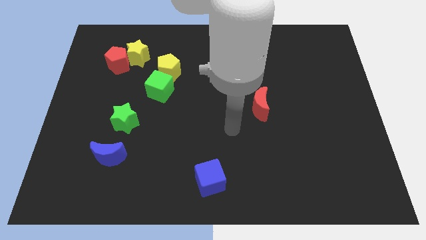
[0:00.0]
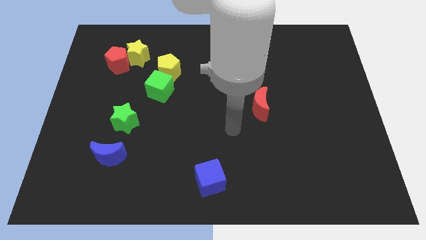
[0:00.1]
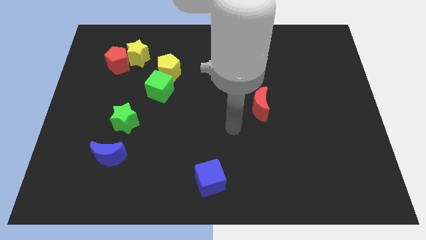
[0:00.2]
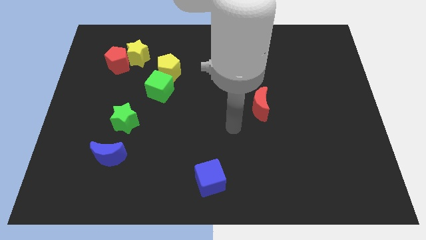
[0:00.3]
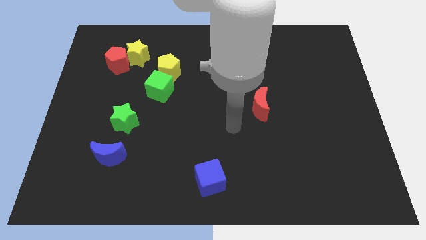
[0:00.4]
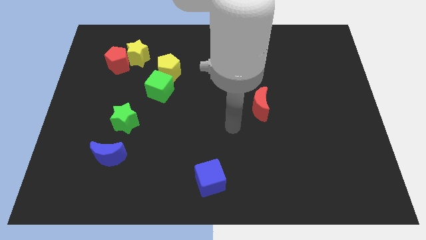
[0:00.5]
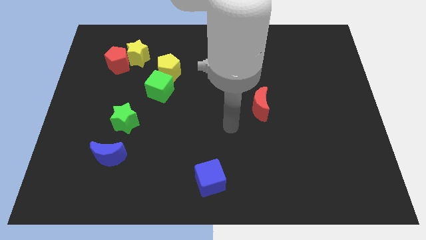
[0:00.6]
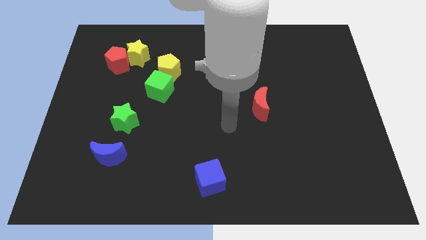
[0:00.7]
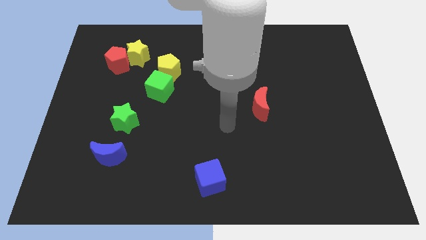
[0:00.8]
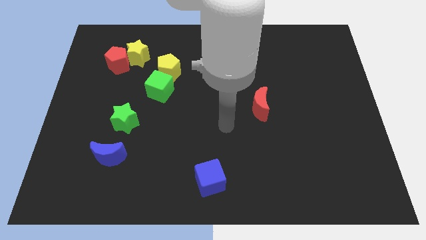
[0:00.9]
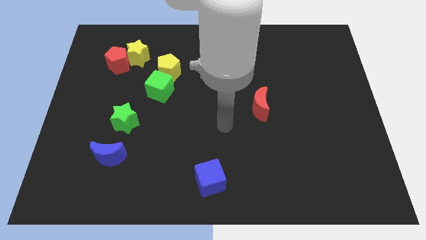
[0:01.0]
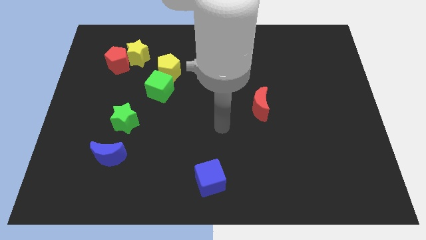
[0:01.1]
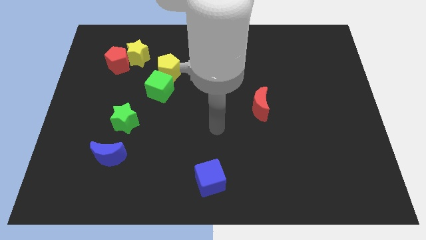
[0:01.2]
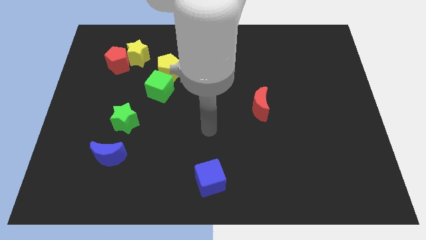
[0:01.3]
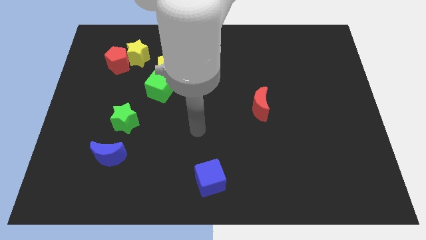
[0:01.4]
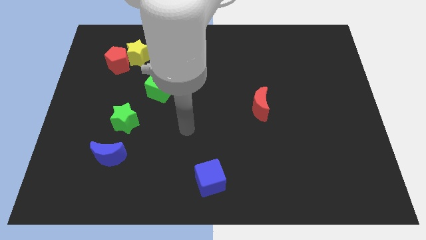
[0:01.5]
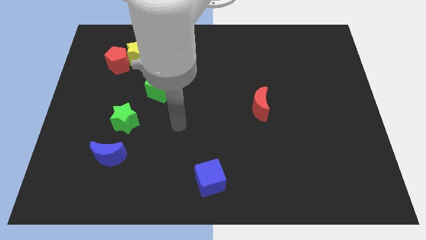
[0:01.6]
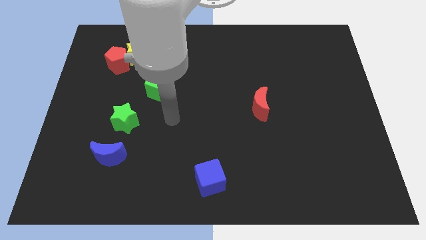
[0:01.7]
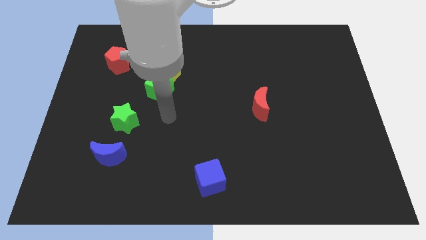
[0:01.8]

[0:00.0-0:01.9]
point your arm below green cube

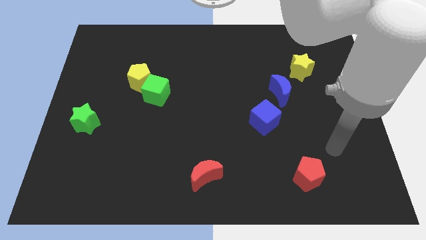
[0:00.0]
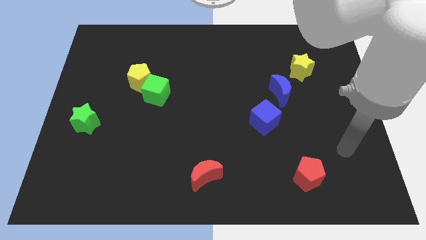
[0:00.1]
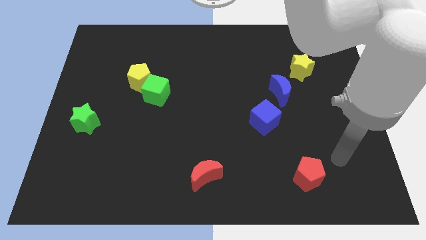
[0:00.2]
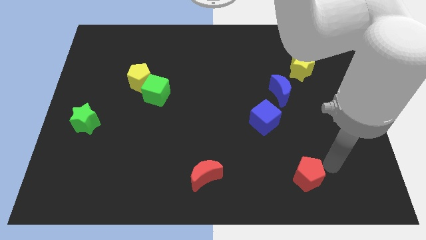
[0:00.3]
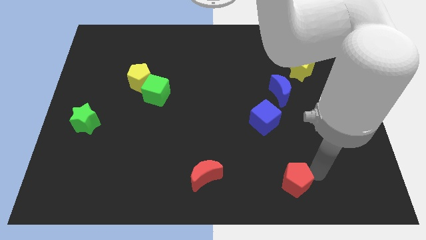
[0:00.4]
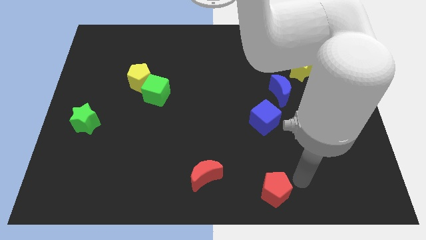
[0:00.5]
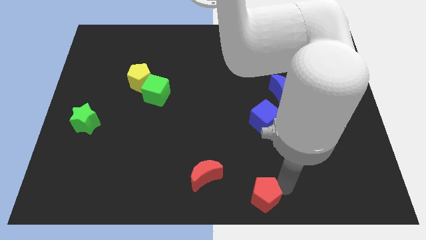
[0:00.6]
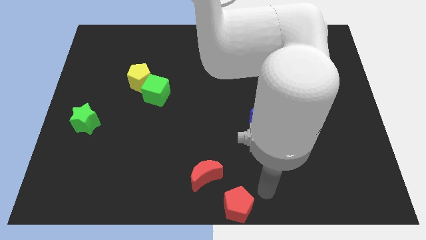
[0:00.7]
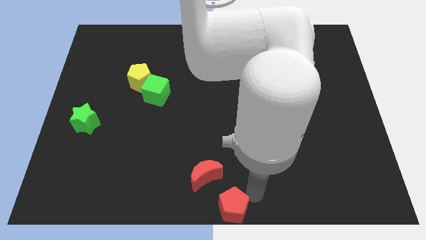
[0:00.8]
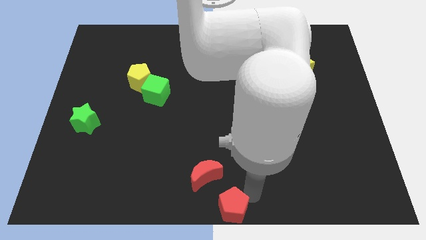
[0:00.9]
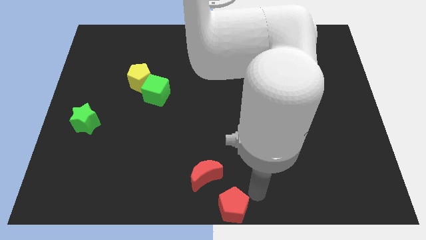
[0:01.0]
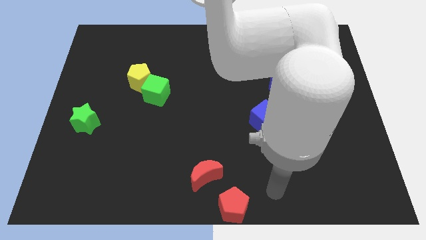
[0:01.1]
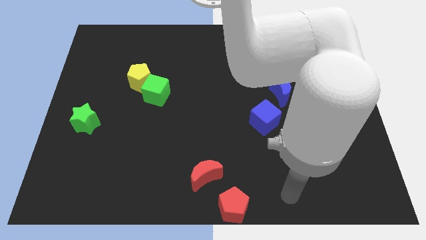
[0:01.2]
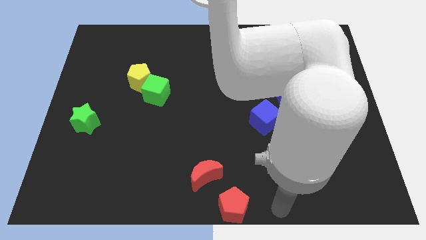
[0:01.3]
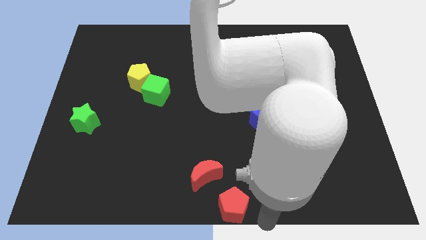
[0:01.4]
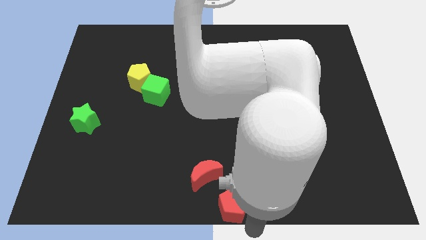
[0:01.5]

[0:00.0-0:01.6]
place red pentagon to the bottom center of the board

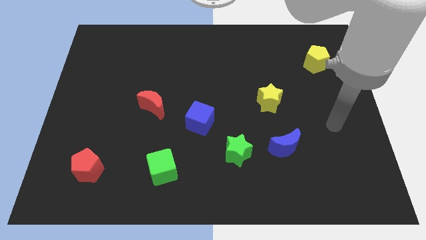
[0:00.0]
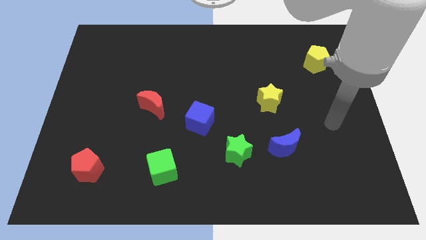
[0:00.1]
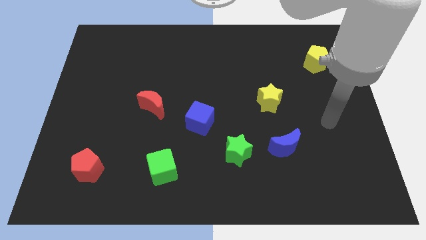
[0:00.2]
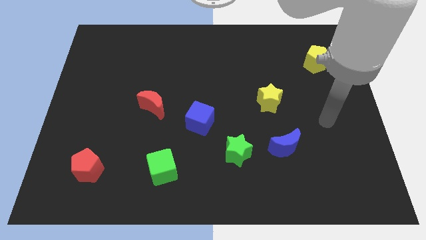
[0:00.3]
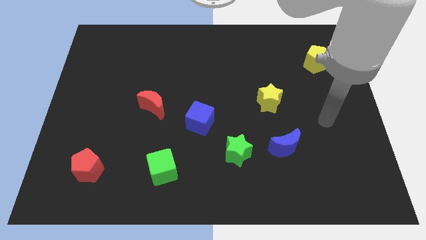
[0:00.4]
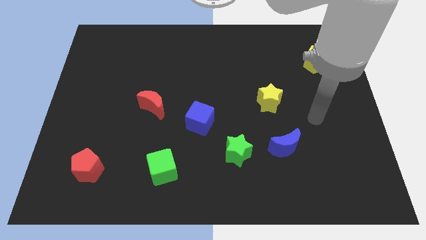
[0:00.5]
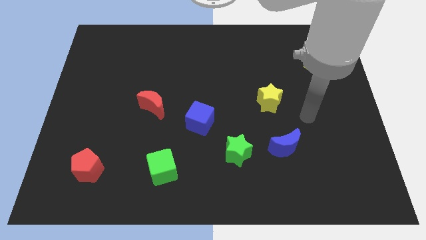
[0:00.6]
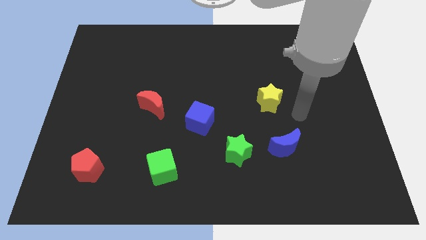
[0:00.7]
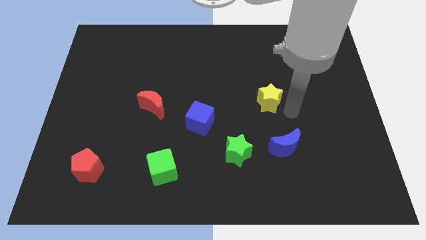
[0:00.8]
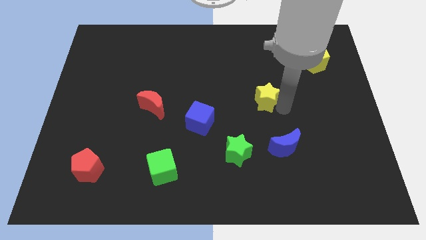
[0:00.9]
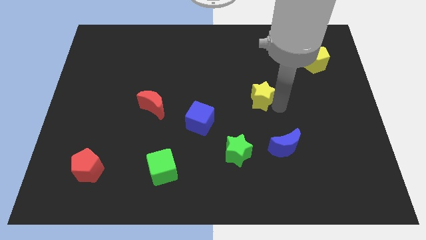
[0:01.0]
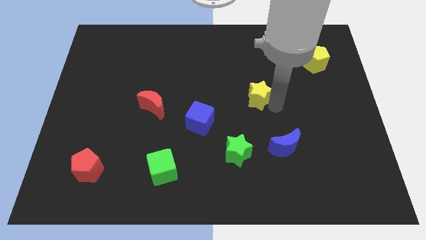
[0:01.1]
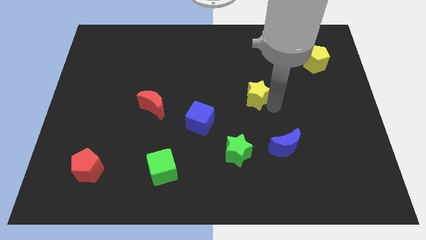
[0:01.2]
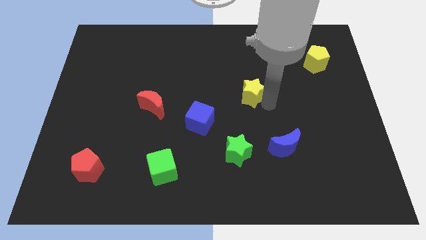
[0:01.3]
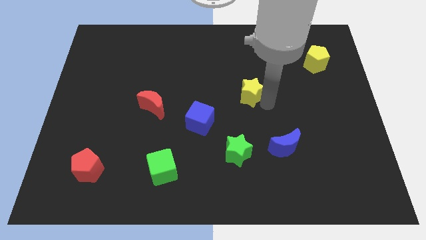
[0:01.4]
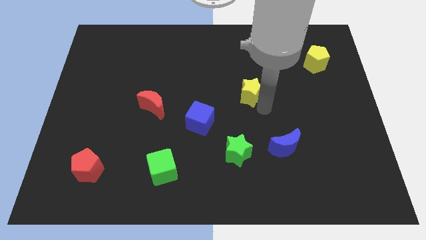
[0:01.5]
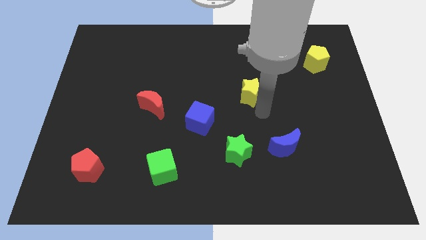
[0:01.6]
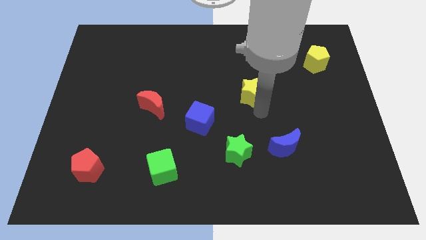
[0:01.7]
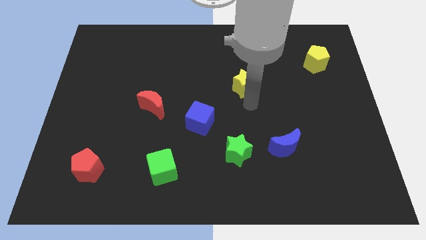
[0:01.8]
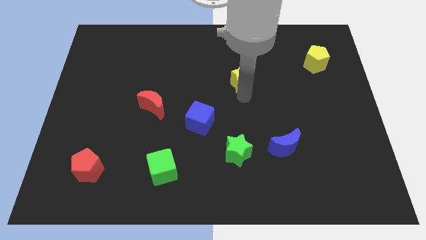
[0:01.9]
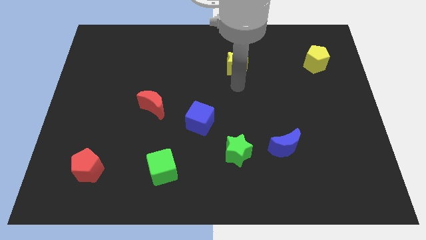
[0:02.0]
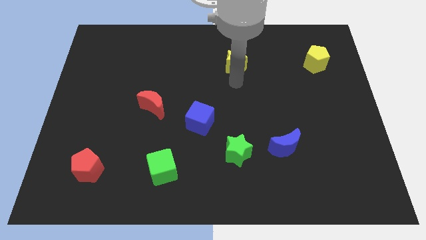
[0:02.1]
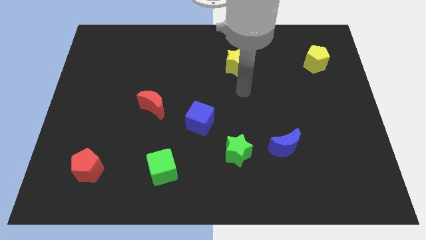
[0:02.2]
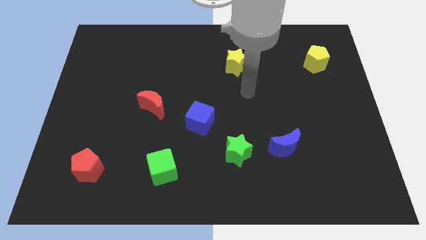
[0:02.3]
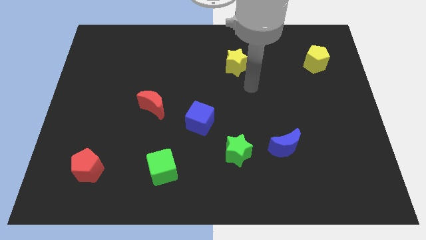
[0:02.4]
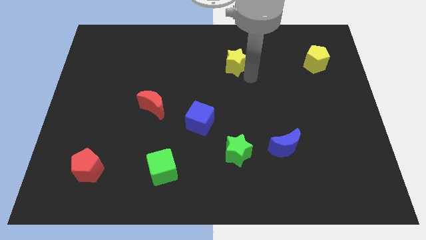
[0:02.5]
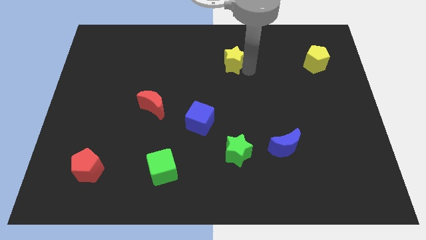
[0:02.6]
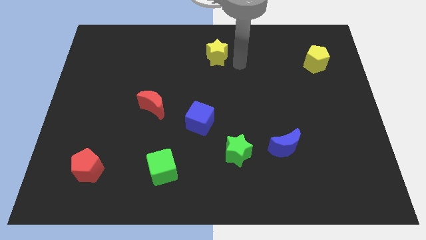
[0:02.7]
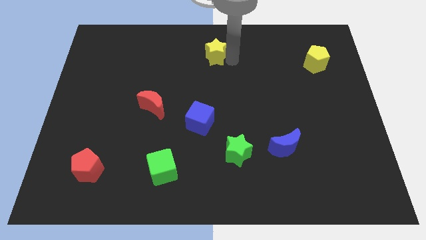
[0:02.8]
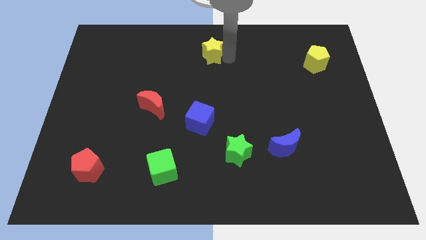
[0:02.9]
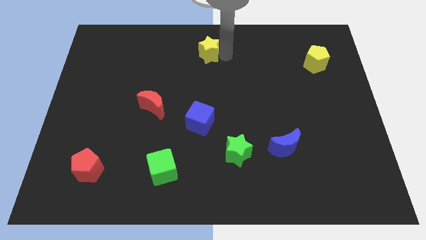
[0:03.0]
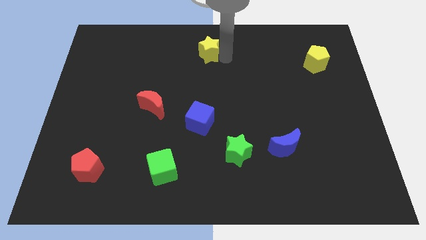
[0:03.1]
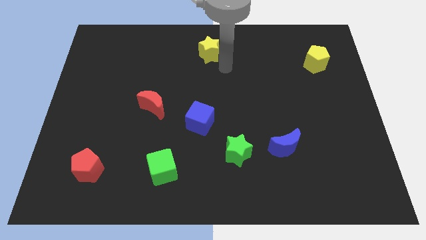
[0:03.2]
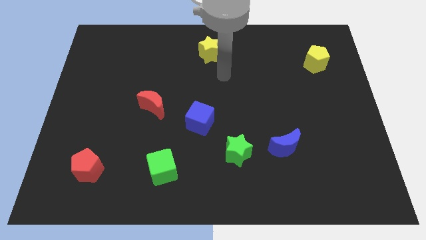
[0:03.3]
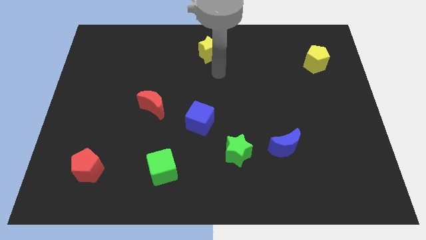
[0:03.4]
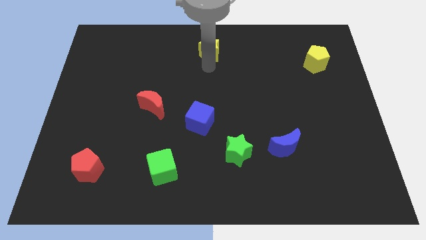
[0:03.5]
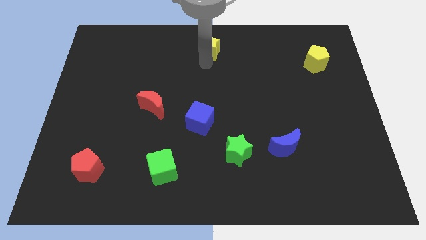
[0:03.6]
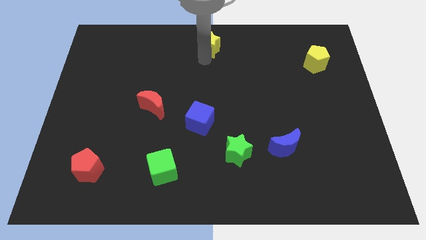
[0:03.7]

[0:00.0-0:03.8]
place the yellow star vertically above the blue cube

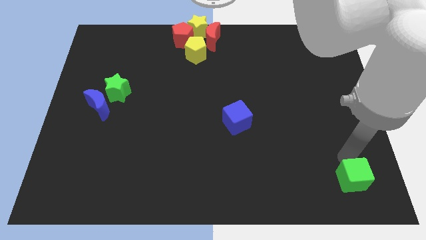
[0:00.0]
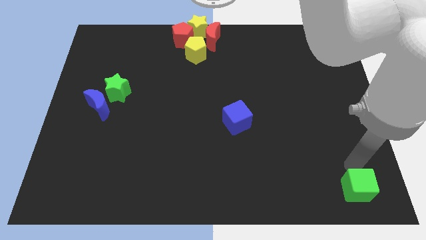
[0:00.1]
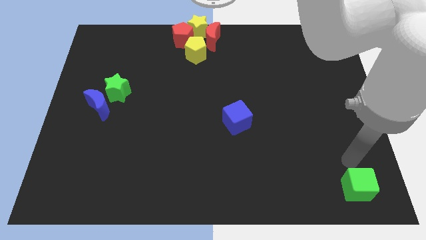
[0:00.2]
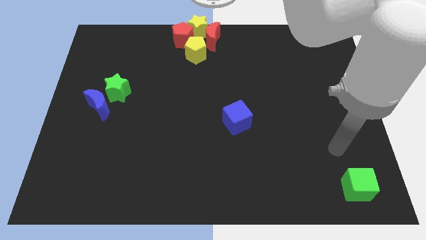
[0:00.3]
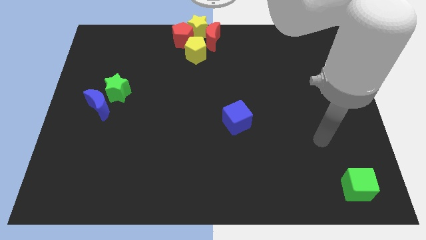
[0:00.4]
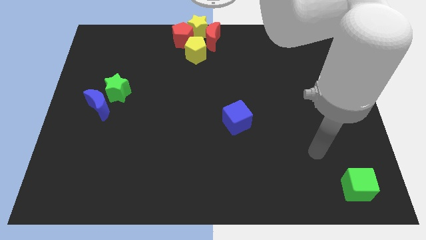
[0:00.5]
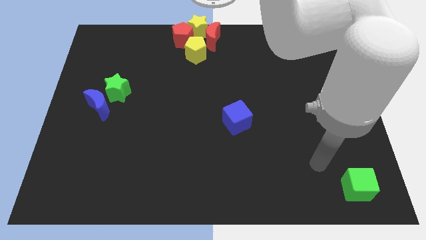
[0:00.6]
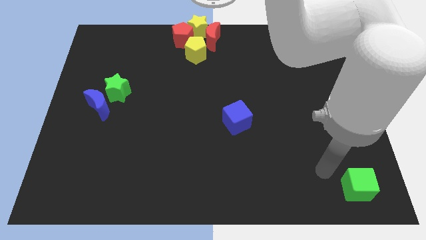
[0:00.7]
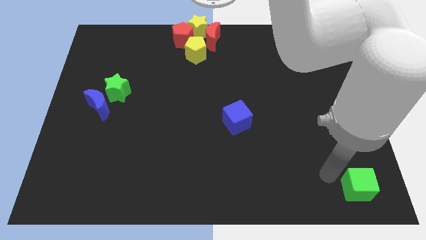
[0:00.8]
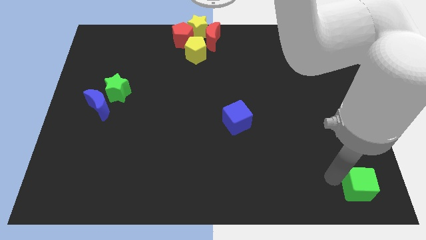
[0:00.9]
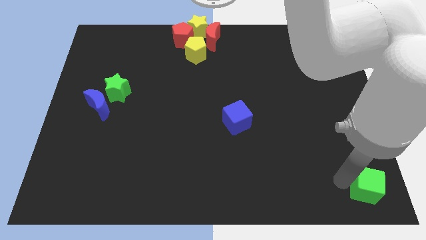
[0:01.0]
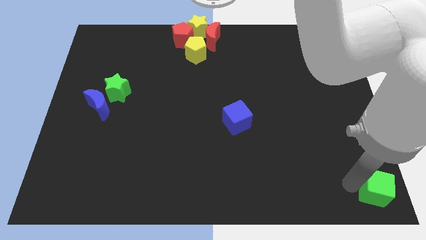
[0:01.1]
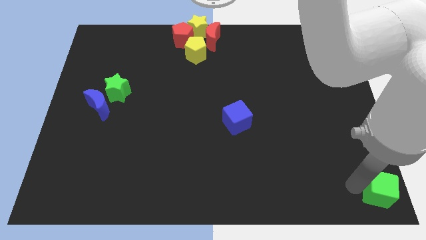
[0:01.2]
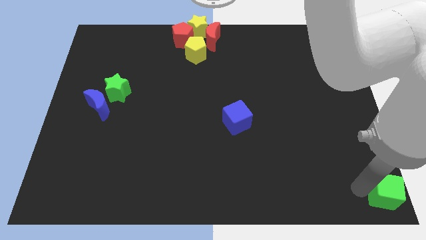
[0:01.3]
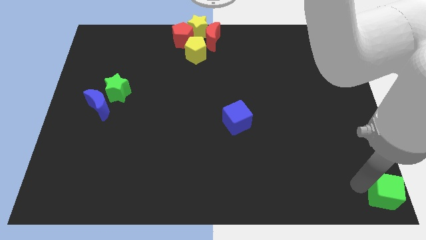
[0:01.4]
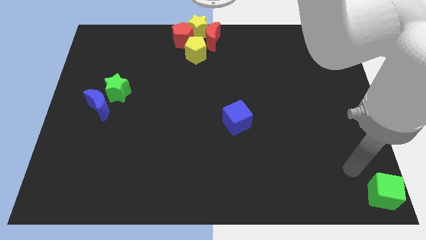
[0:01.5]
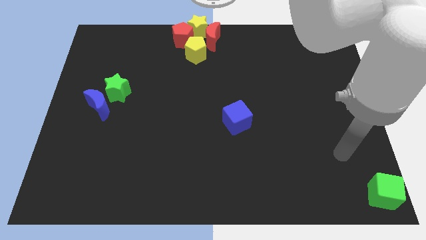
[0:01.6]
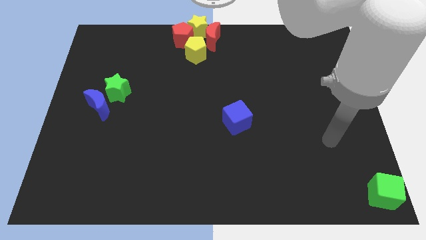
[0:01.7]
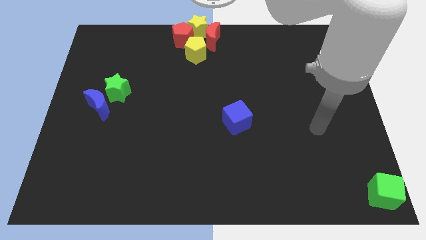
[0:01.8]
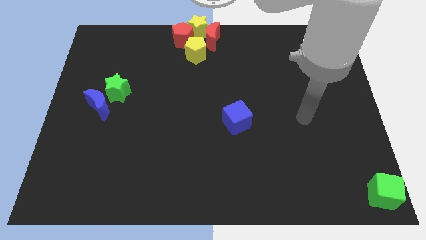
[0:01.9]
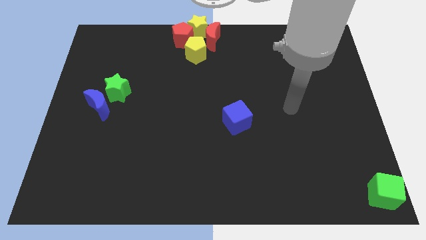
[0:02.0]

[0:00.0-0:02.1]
place the green cube to the bottom right corner
